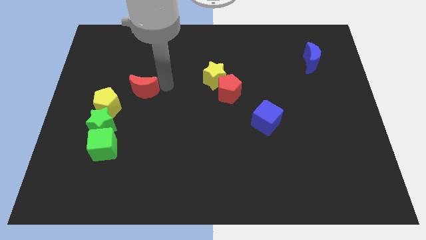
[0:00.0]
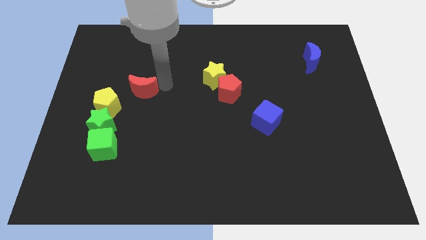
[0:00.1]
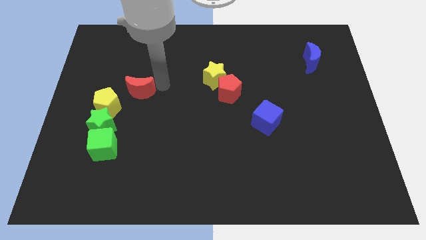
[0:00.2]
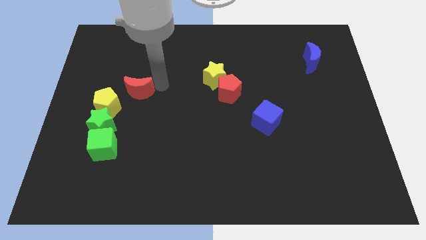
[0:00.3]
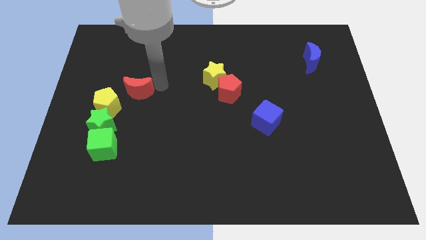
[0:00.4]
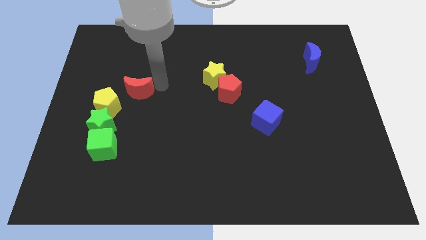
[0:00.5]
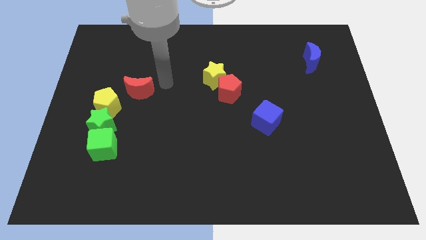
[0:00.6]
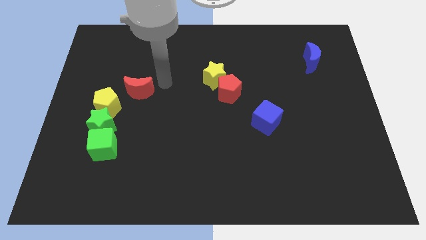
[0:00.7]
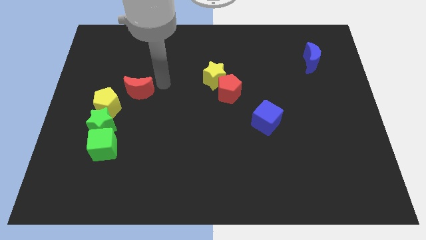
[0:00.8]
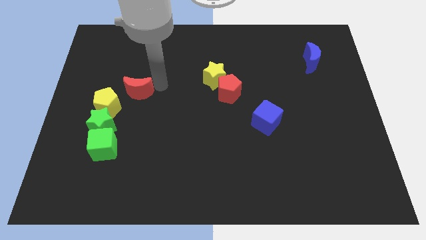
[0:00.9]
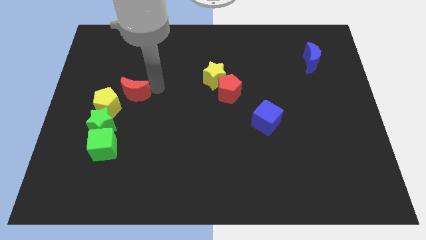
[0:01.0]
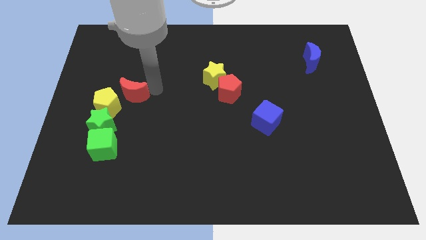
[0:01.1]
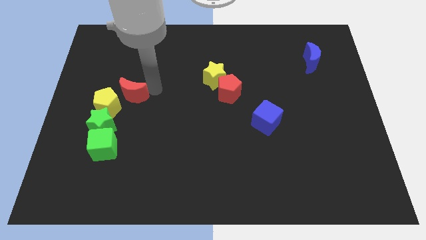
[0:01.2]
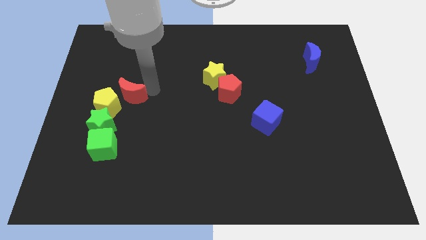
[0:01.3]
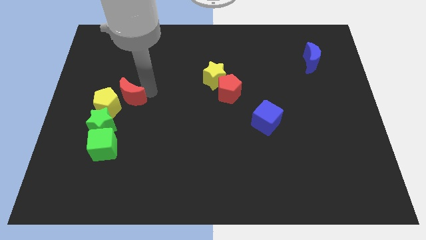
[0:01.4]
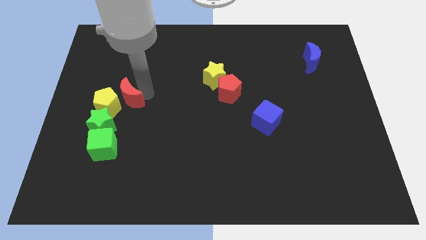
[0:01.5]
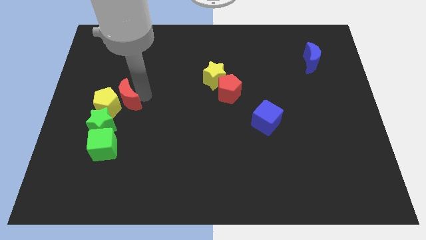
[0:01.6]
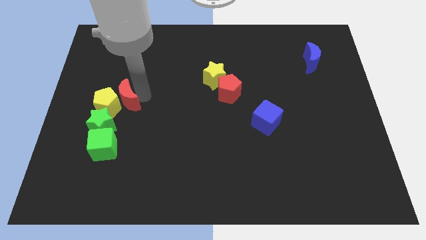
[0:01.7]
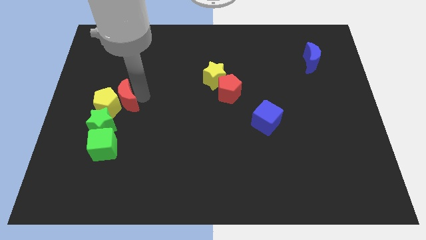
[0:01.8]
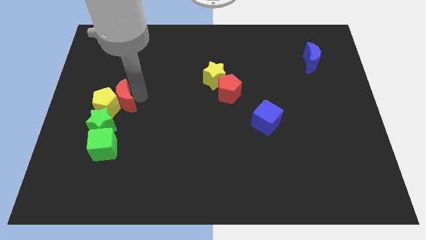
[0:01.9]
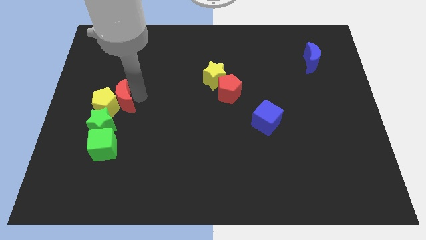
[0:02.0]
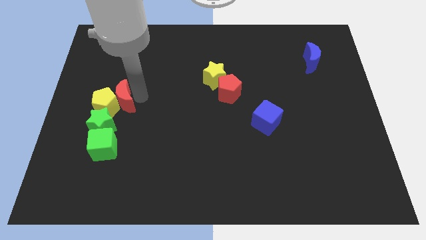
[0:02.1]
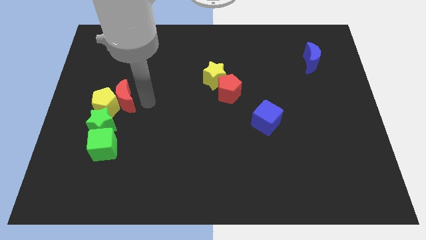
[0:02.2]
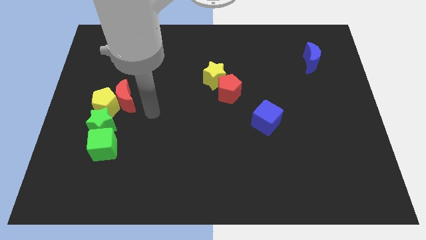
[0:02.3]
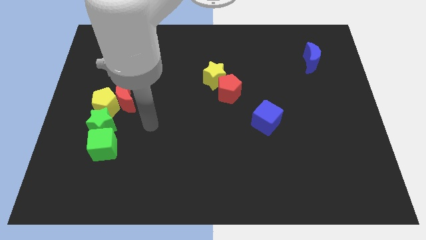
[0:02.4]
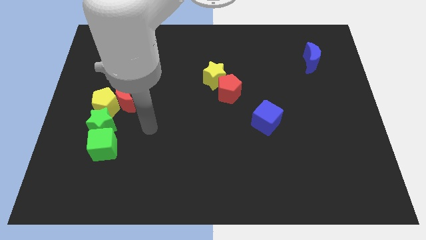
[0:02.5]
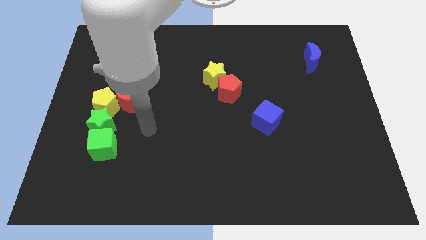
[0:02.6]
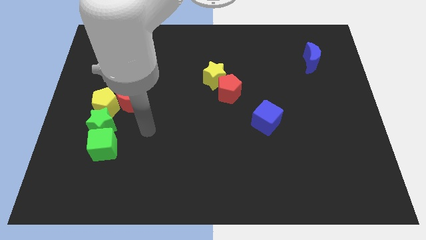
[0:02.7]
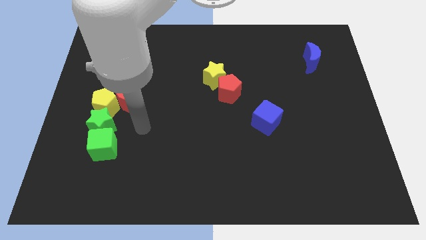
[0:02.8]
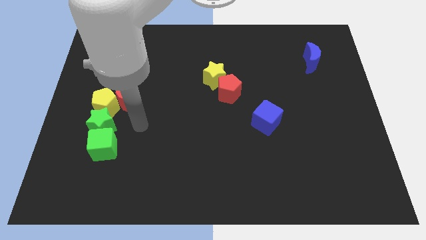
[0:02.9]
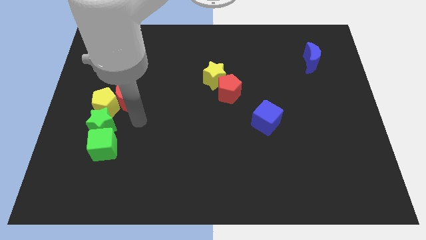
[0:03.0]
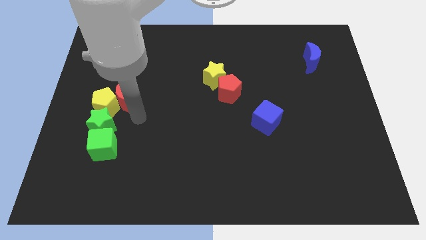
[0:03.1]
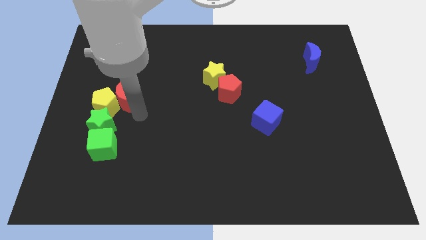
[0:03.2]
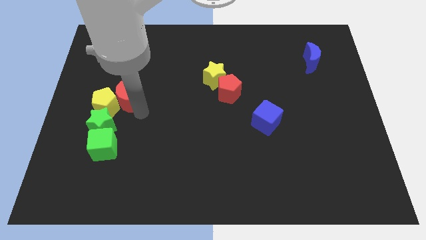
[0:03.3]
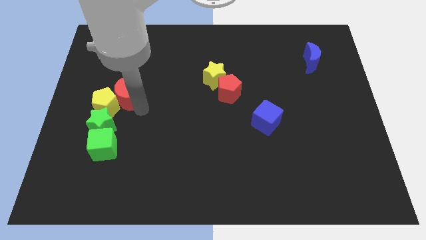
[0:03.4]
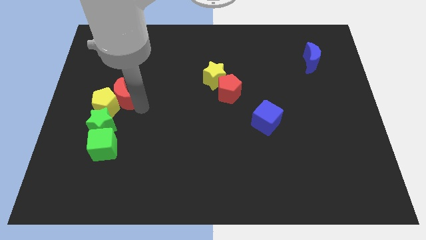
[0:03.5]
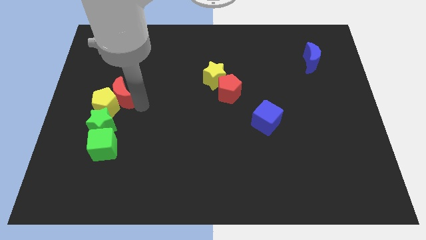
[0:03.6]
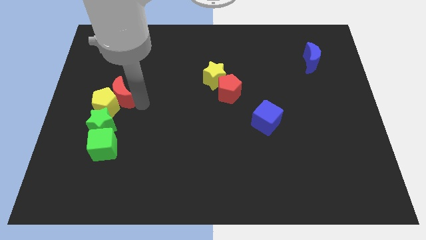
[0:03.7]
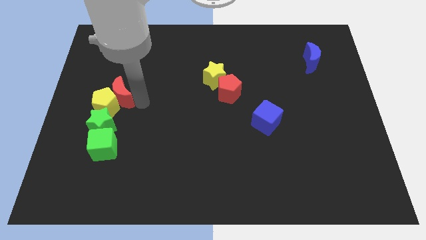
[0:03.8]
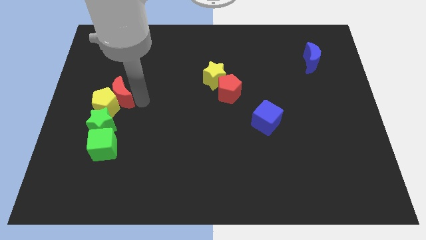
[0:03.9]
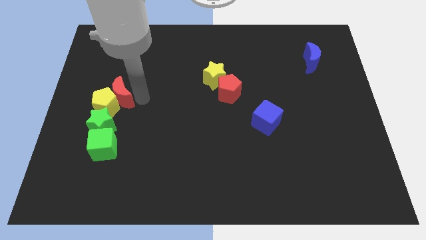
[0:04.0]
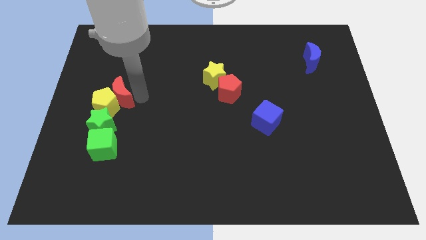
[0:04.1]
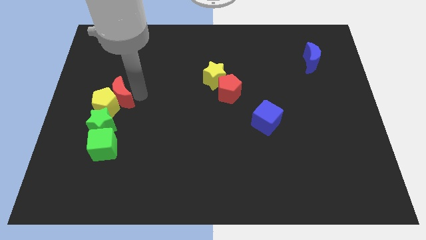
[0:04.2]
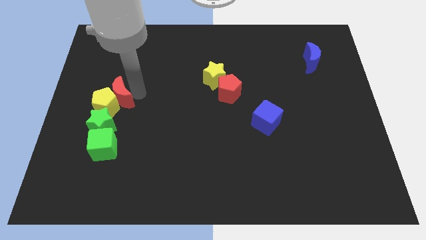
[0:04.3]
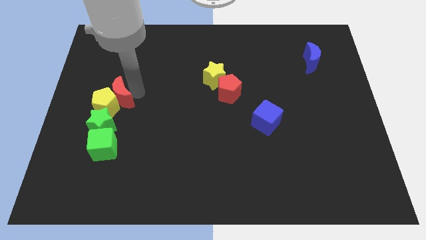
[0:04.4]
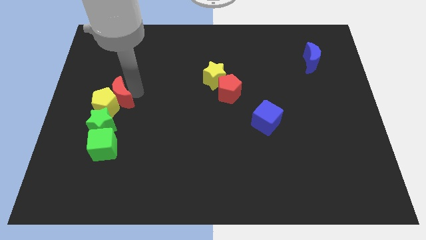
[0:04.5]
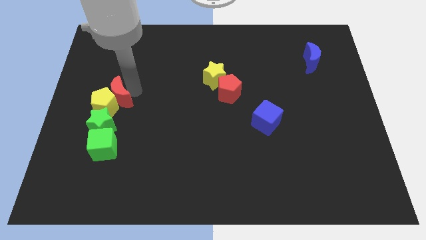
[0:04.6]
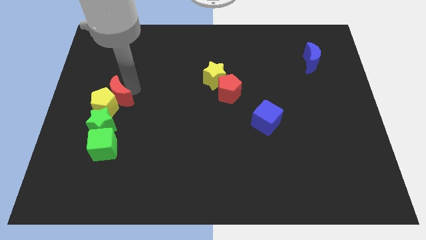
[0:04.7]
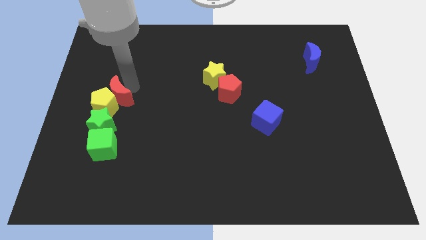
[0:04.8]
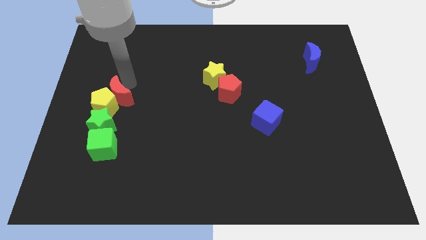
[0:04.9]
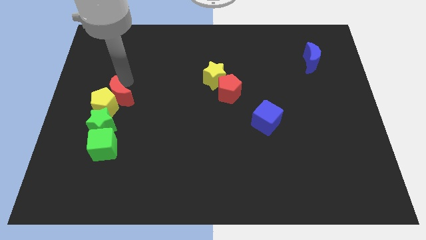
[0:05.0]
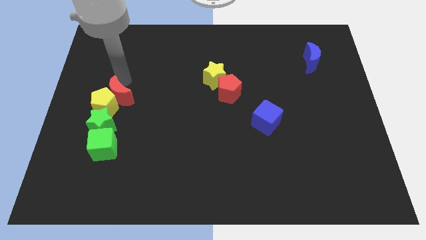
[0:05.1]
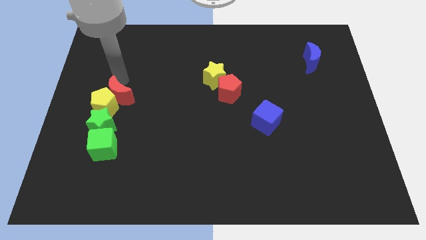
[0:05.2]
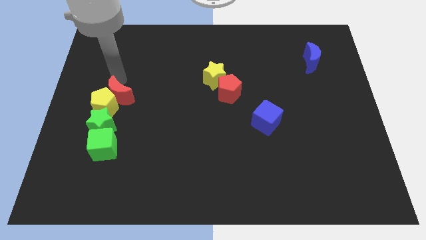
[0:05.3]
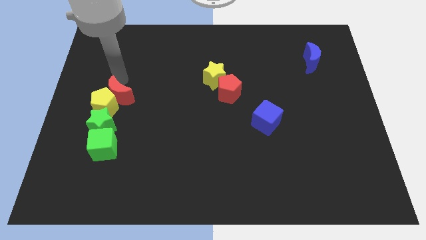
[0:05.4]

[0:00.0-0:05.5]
place the red moon above the yellow pentagon

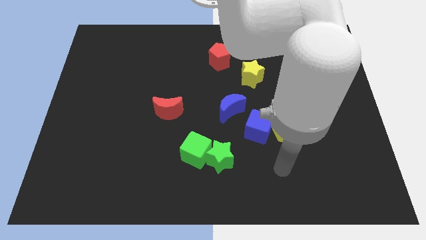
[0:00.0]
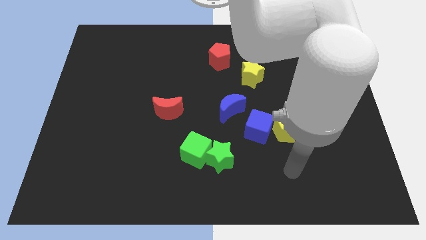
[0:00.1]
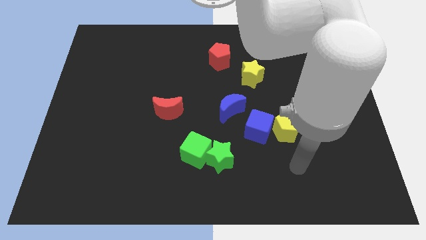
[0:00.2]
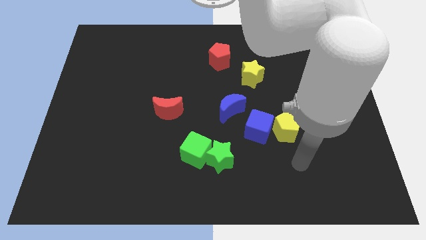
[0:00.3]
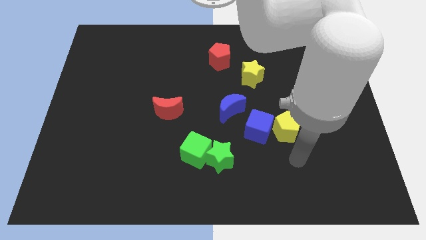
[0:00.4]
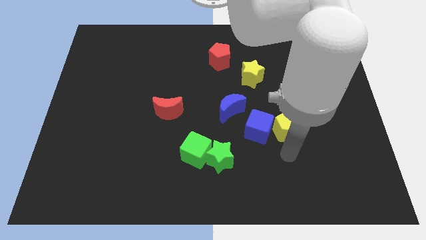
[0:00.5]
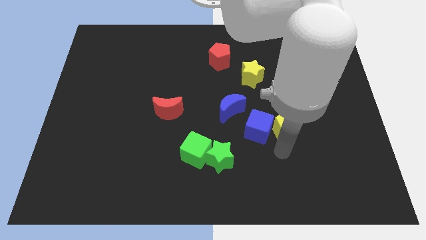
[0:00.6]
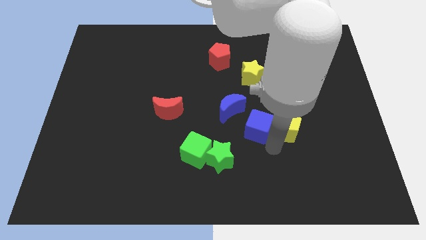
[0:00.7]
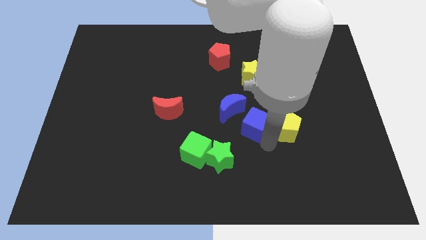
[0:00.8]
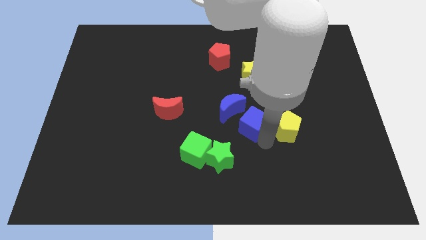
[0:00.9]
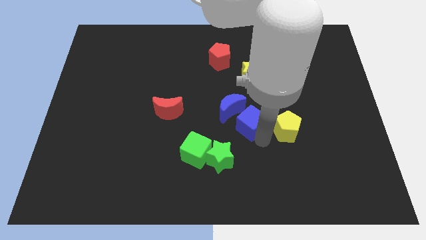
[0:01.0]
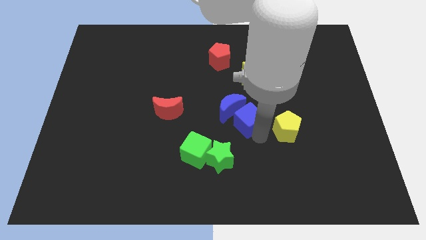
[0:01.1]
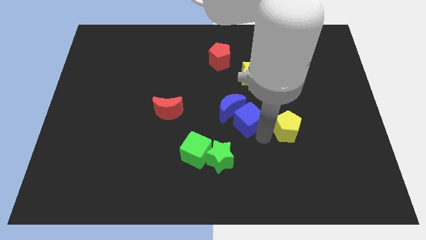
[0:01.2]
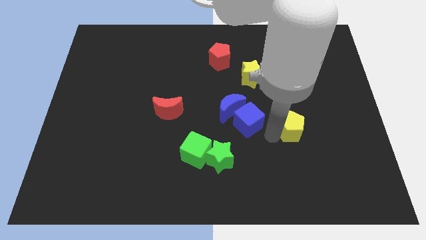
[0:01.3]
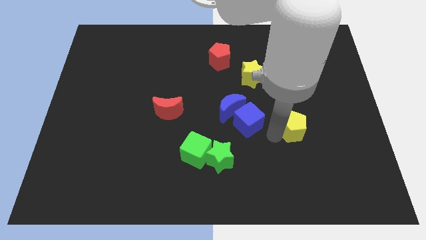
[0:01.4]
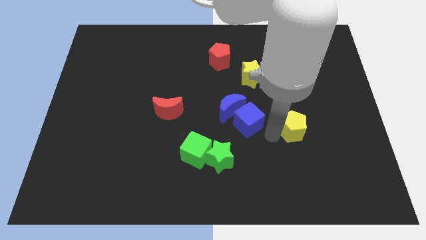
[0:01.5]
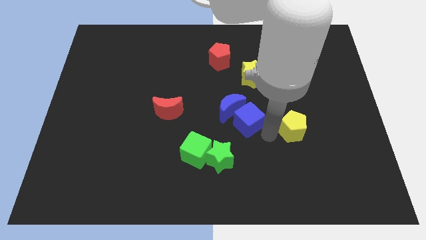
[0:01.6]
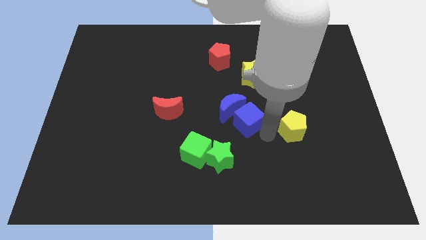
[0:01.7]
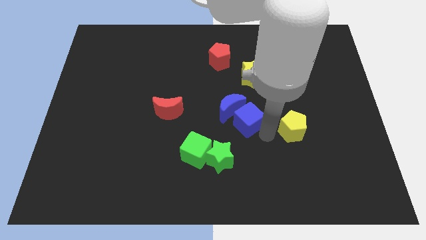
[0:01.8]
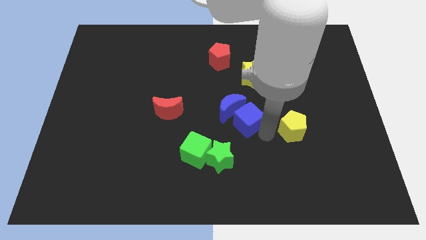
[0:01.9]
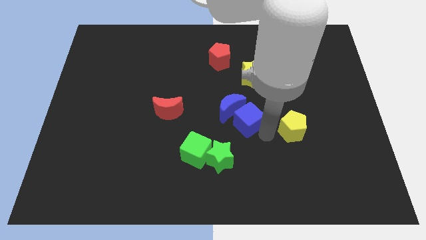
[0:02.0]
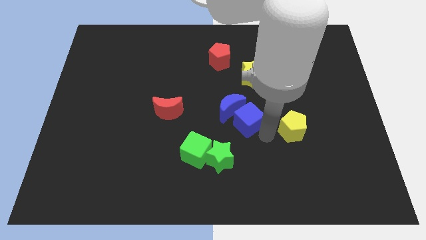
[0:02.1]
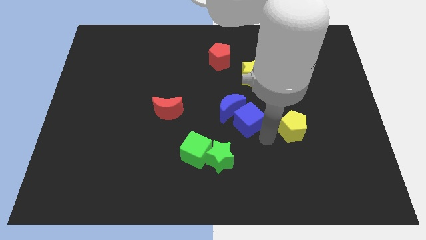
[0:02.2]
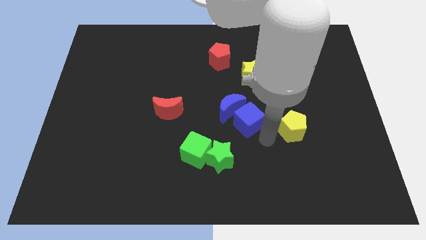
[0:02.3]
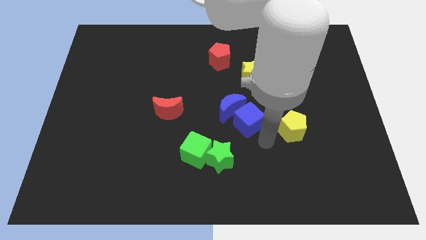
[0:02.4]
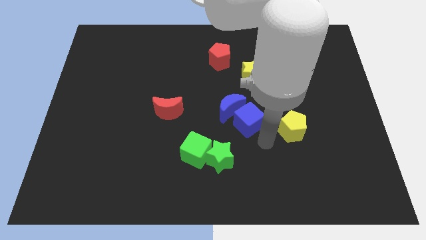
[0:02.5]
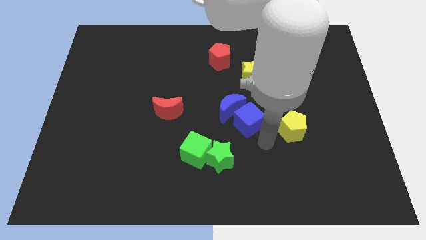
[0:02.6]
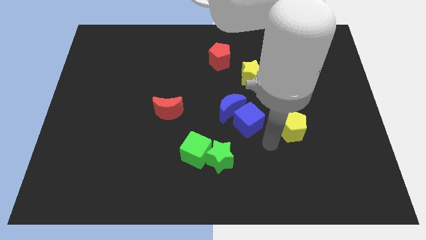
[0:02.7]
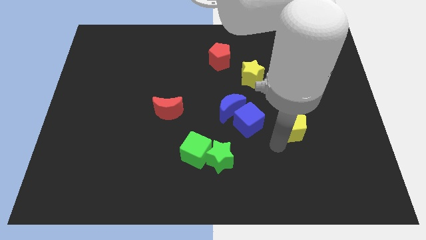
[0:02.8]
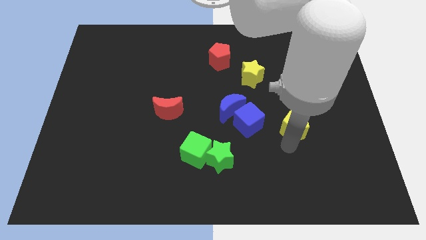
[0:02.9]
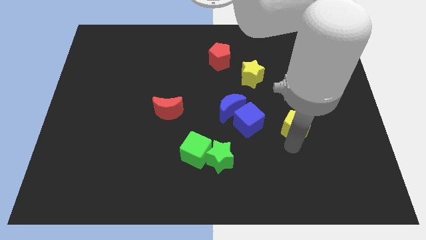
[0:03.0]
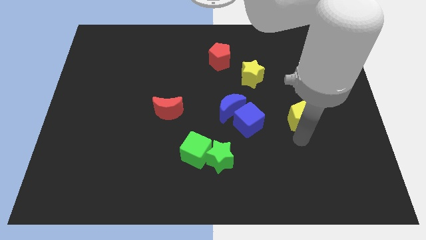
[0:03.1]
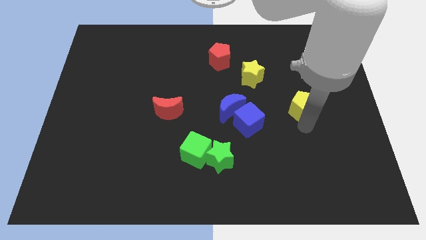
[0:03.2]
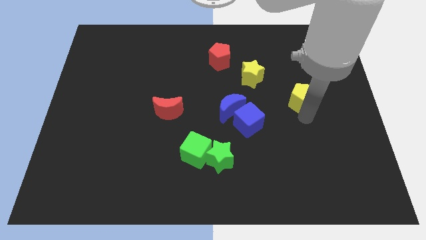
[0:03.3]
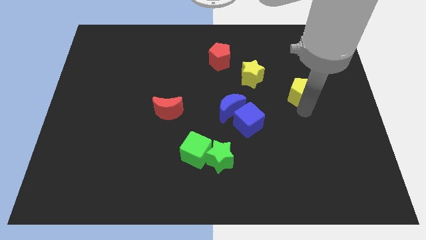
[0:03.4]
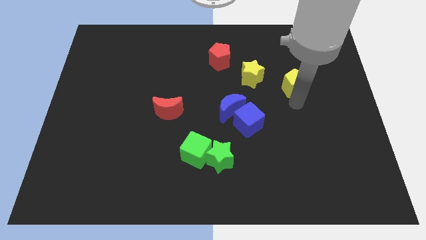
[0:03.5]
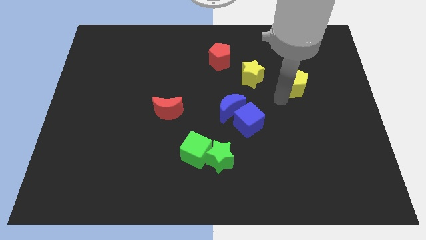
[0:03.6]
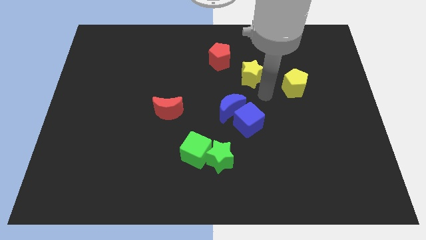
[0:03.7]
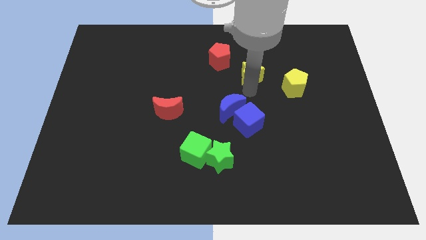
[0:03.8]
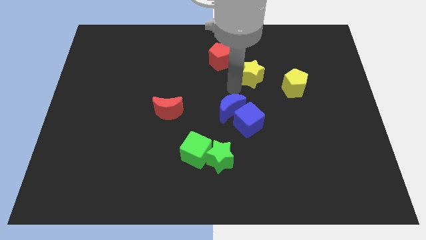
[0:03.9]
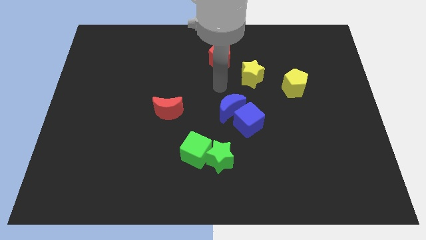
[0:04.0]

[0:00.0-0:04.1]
place yellow pentagon to the right of yellow star
